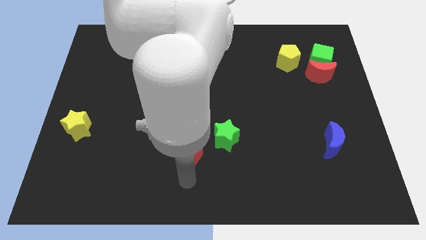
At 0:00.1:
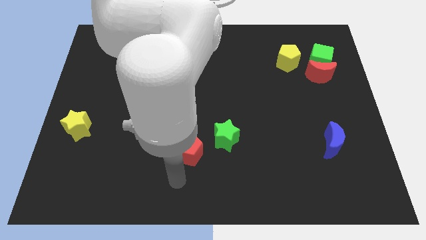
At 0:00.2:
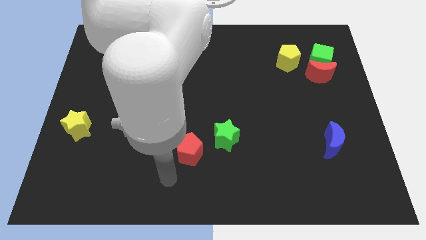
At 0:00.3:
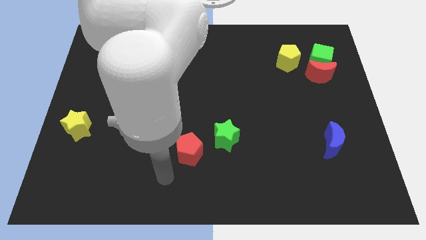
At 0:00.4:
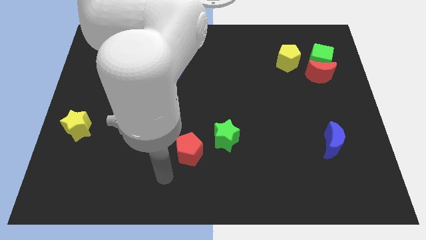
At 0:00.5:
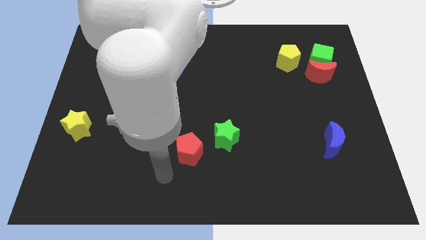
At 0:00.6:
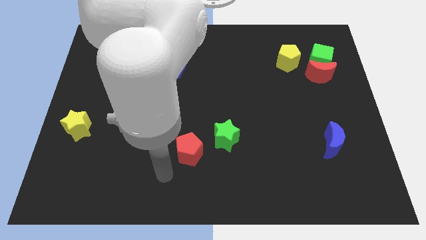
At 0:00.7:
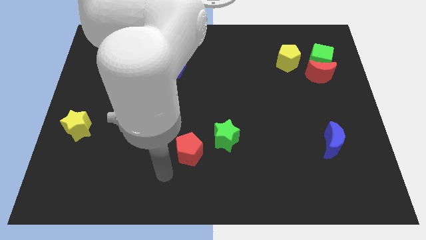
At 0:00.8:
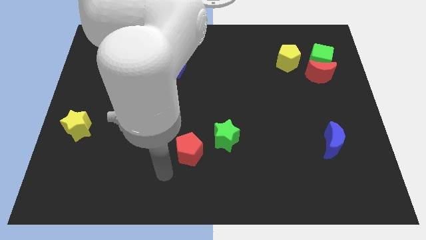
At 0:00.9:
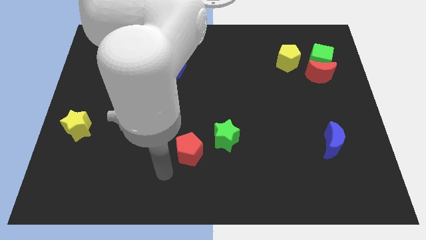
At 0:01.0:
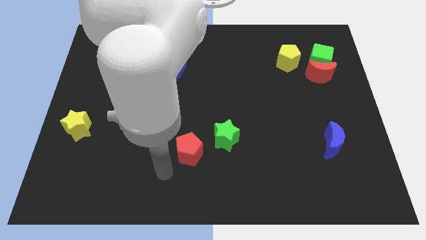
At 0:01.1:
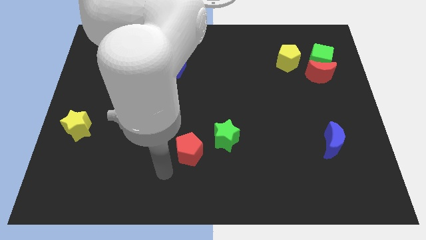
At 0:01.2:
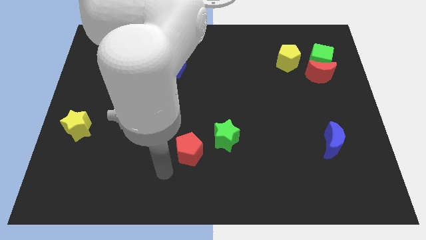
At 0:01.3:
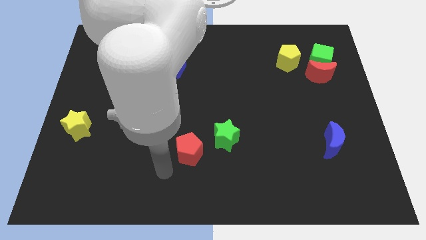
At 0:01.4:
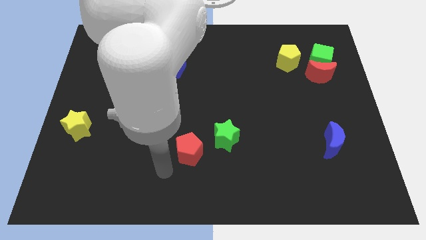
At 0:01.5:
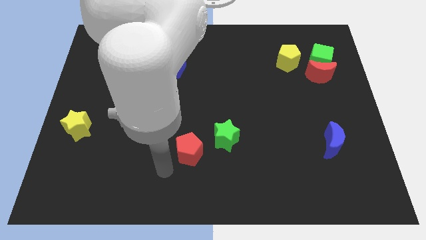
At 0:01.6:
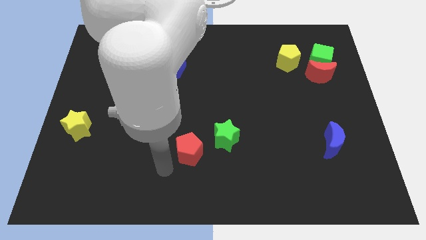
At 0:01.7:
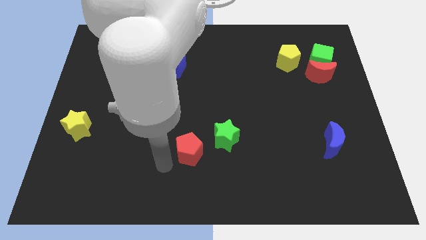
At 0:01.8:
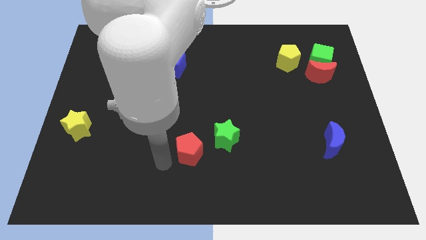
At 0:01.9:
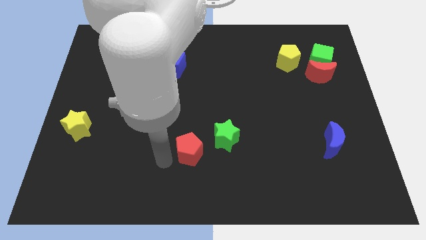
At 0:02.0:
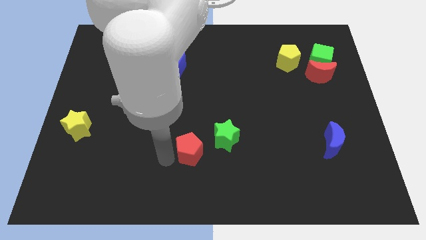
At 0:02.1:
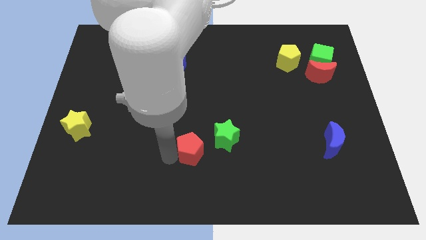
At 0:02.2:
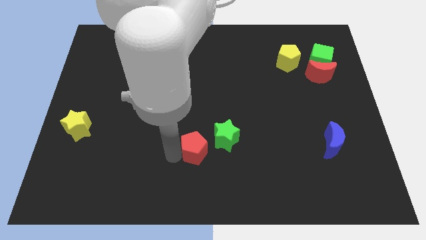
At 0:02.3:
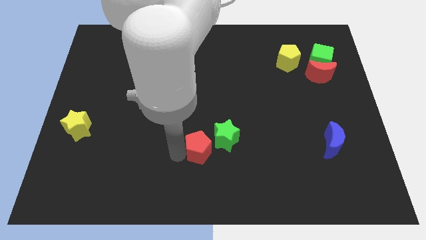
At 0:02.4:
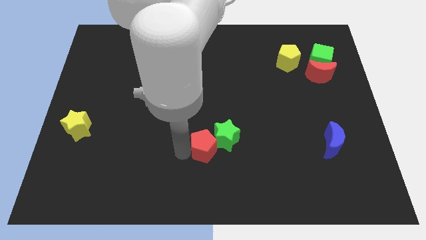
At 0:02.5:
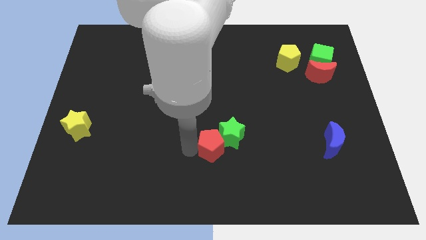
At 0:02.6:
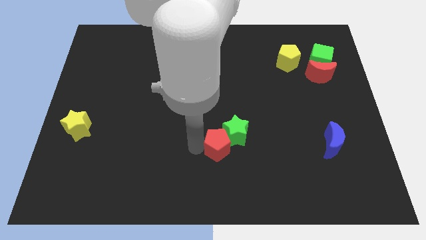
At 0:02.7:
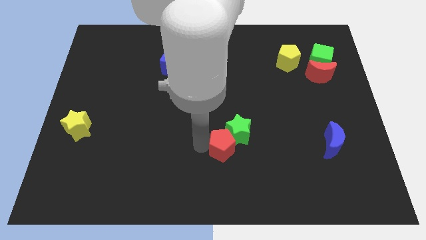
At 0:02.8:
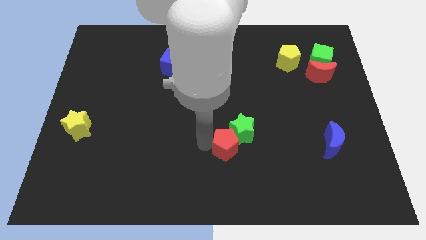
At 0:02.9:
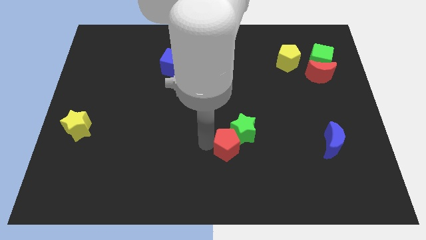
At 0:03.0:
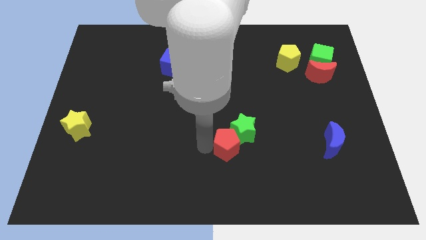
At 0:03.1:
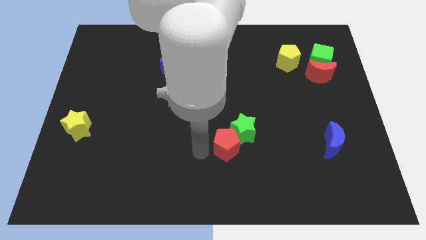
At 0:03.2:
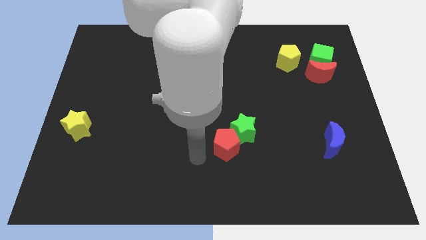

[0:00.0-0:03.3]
arm moving close to the red pentagon and green star

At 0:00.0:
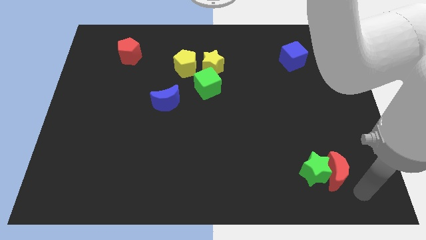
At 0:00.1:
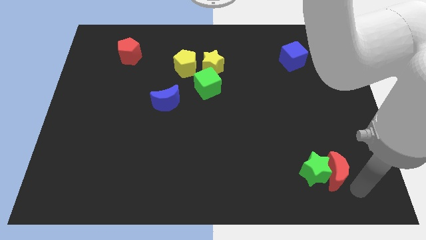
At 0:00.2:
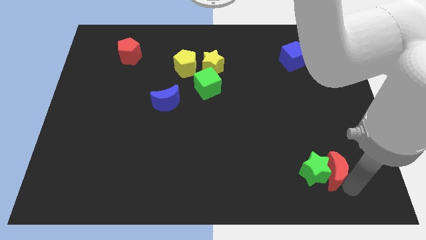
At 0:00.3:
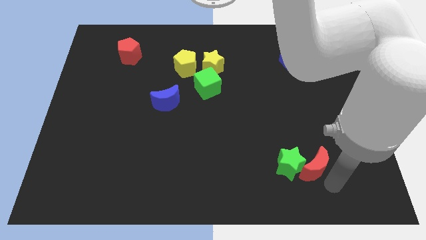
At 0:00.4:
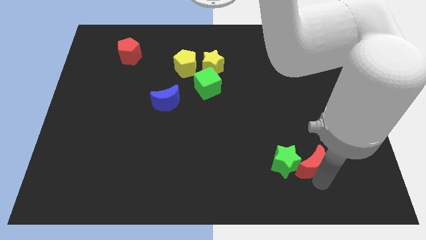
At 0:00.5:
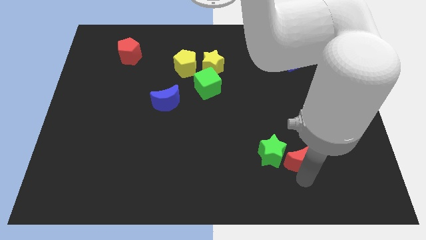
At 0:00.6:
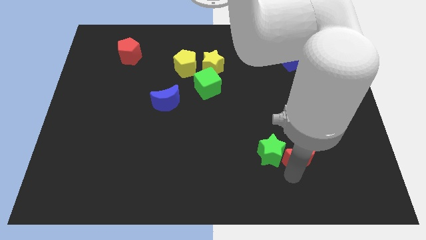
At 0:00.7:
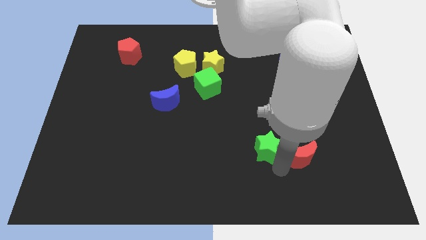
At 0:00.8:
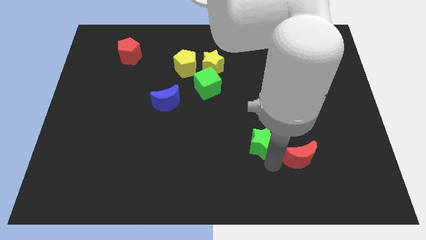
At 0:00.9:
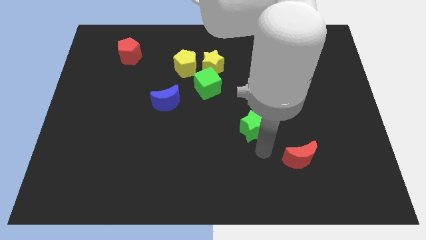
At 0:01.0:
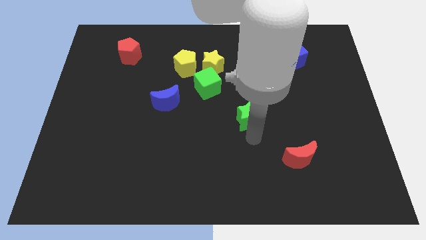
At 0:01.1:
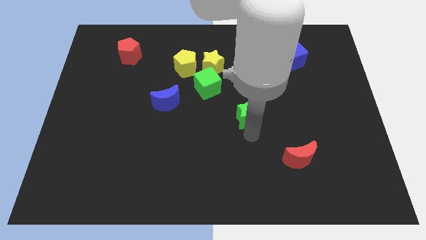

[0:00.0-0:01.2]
move green star in between green cube and red moon

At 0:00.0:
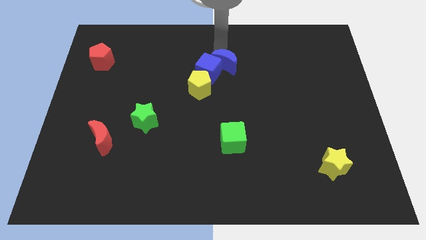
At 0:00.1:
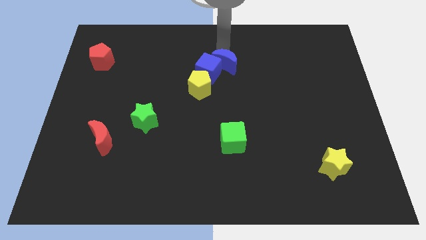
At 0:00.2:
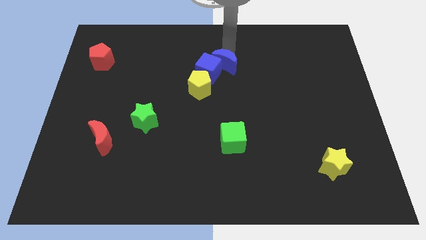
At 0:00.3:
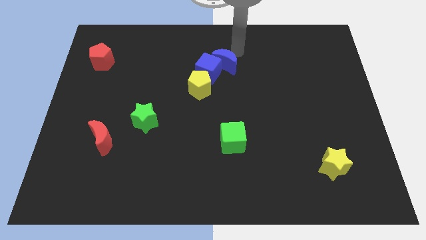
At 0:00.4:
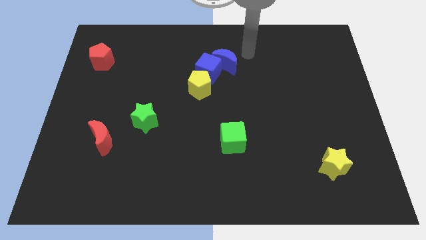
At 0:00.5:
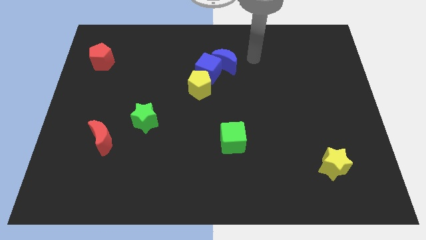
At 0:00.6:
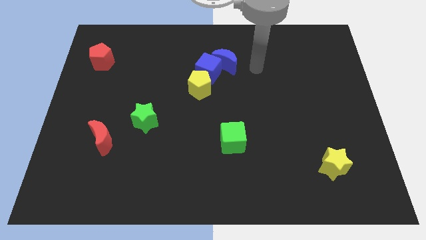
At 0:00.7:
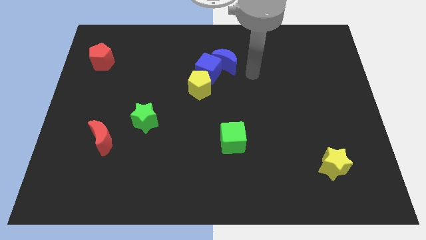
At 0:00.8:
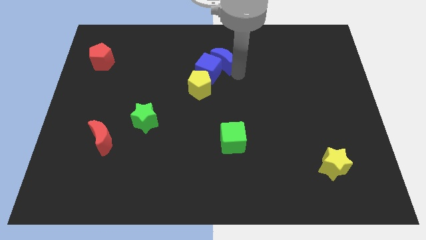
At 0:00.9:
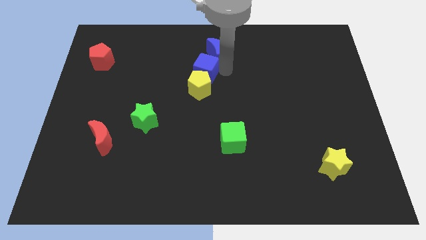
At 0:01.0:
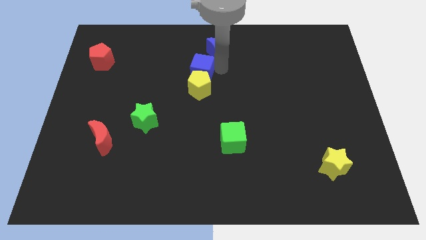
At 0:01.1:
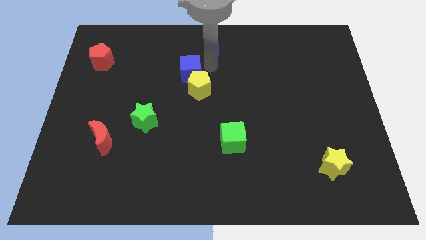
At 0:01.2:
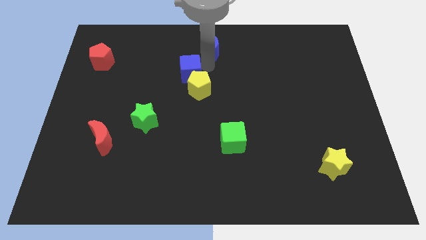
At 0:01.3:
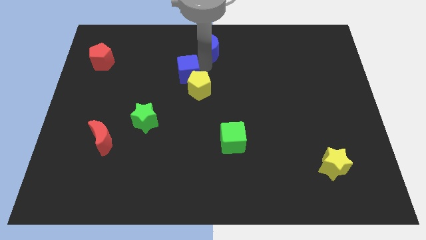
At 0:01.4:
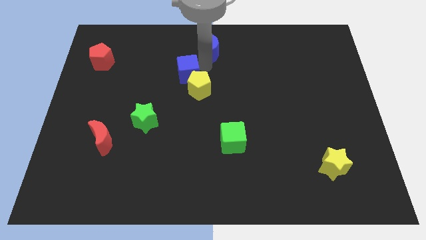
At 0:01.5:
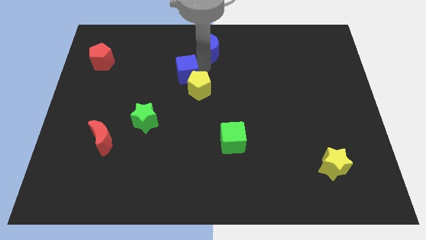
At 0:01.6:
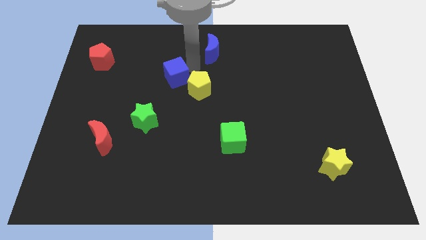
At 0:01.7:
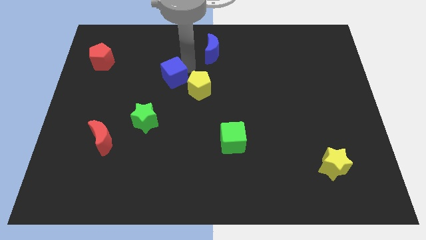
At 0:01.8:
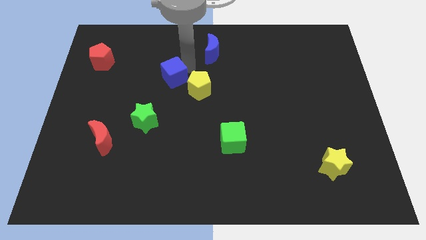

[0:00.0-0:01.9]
separate blue cube from the blue crescent

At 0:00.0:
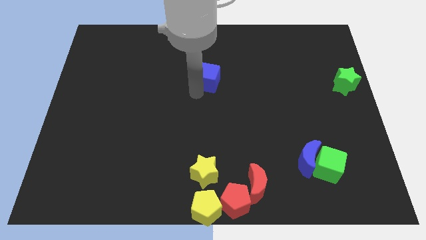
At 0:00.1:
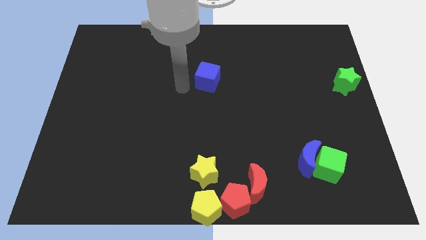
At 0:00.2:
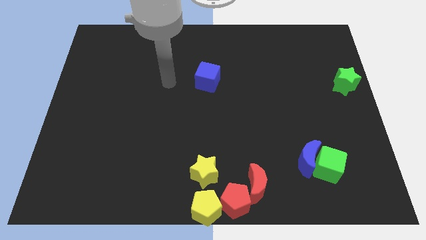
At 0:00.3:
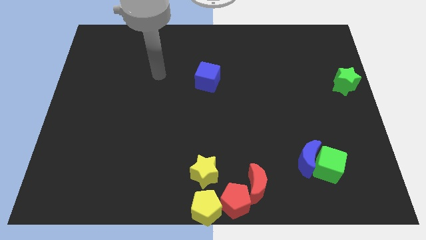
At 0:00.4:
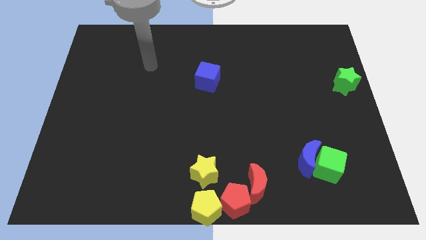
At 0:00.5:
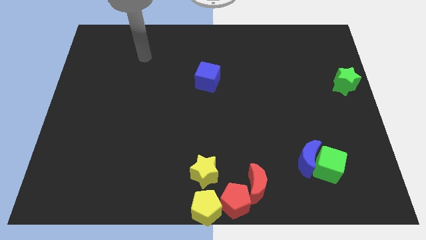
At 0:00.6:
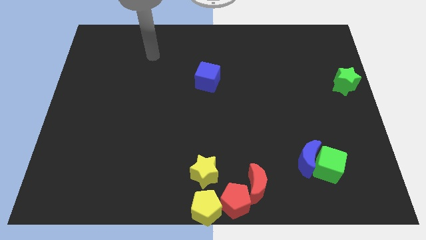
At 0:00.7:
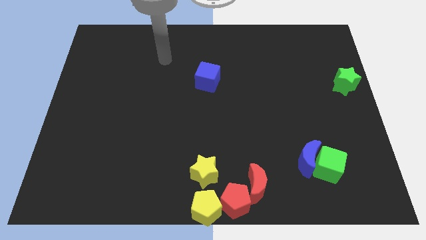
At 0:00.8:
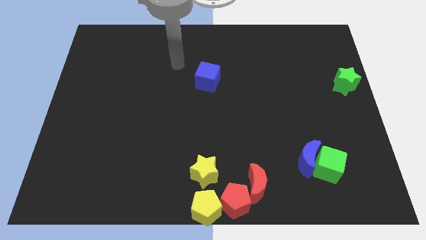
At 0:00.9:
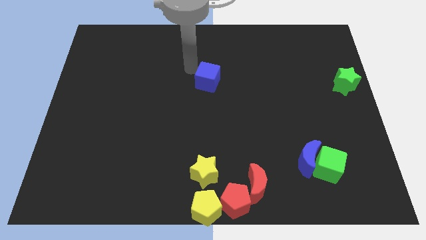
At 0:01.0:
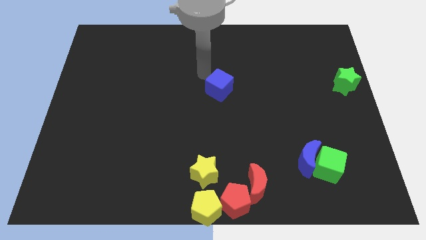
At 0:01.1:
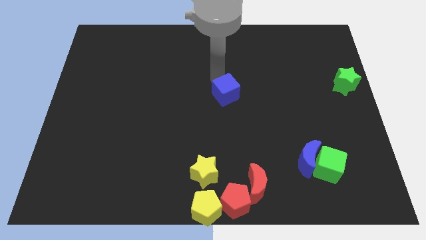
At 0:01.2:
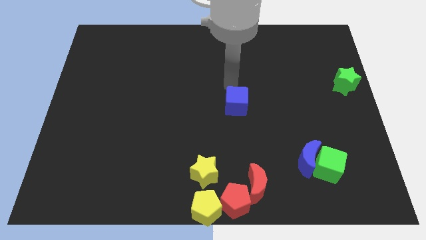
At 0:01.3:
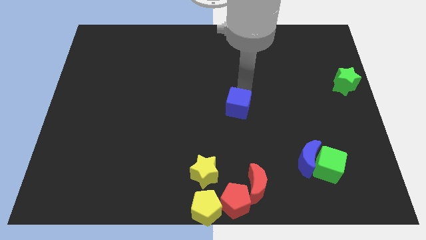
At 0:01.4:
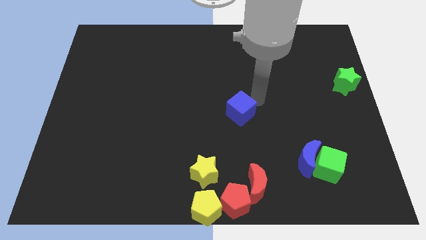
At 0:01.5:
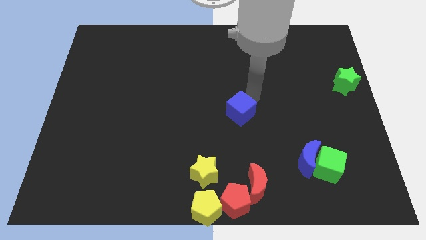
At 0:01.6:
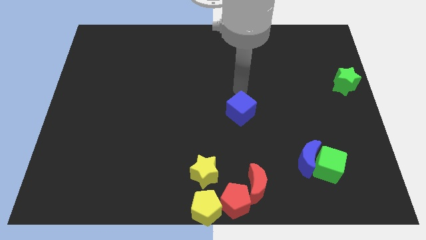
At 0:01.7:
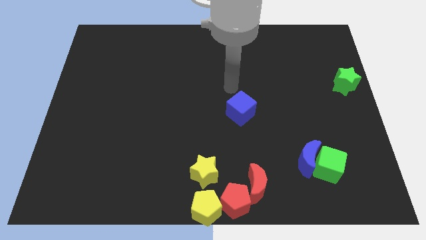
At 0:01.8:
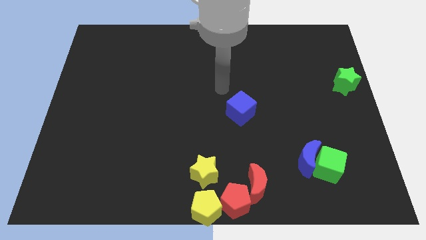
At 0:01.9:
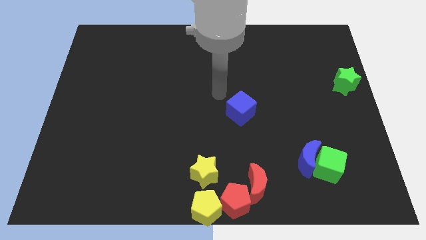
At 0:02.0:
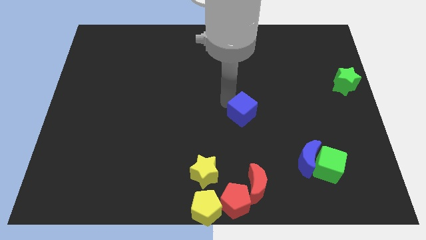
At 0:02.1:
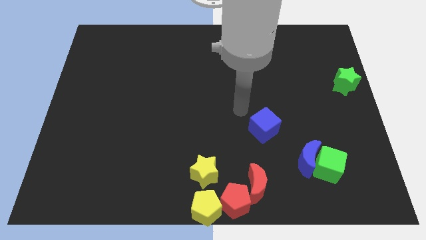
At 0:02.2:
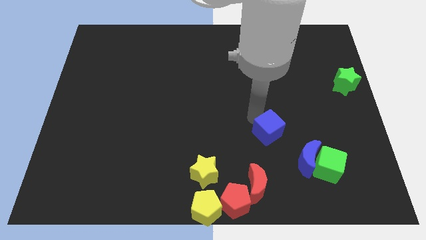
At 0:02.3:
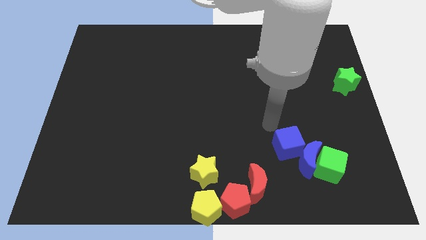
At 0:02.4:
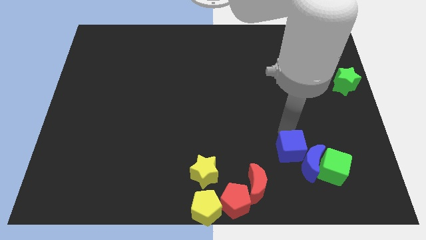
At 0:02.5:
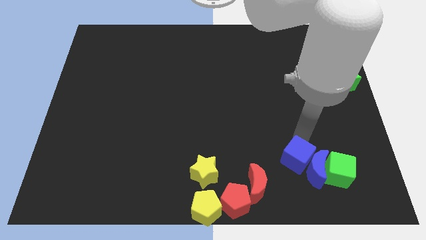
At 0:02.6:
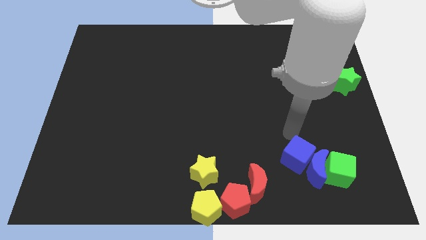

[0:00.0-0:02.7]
push the blue cube into the blue moon
